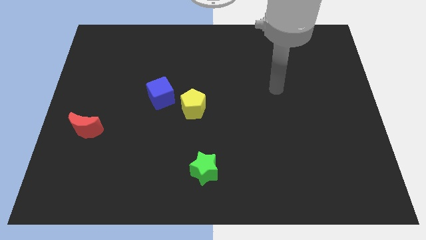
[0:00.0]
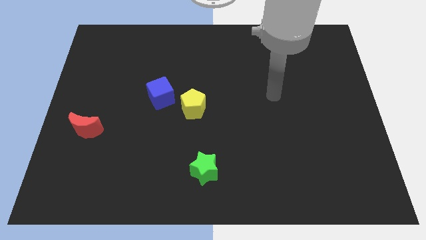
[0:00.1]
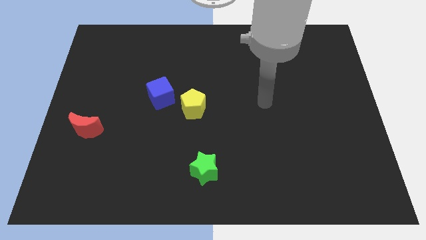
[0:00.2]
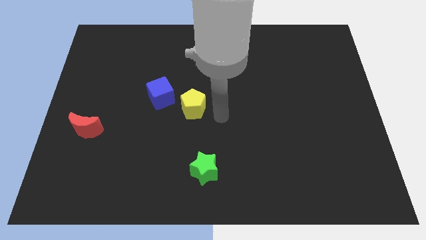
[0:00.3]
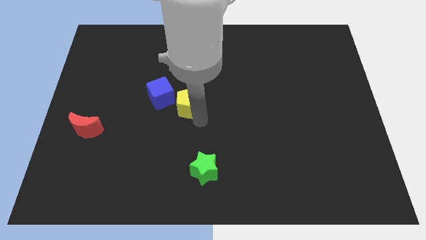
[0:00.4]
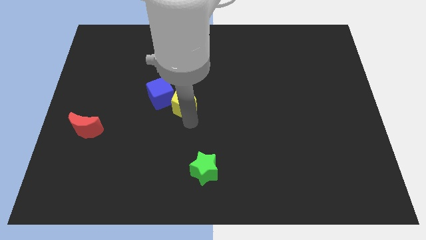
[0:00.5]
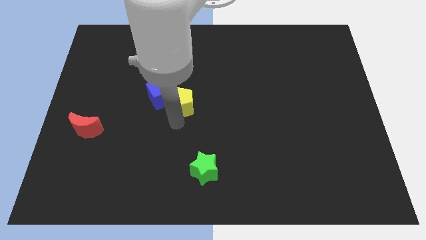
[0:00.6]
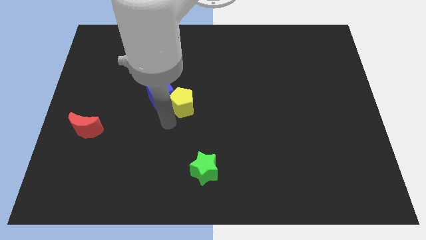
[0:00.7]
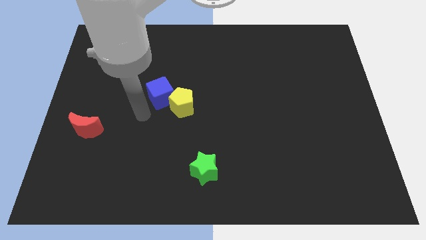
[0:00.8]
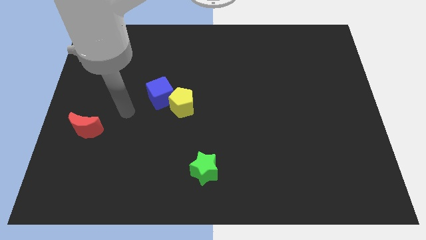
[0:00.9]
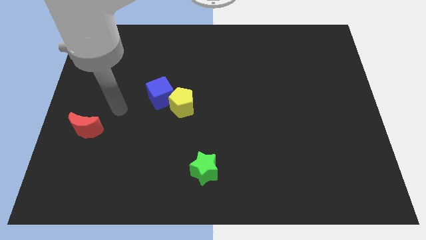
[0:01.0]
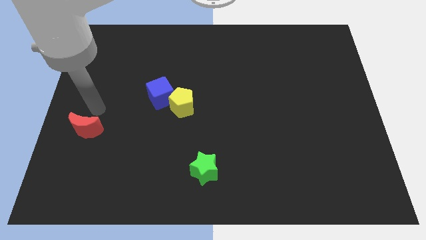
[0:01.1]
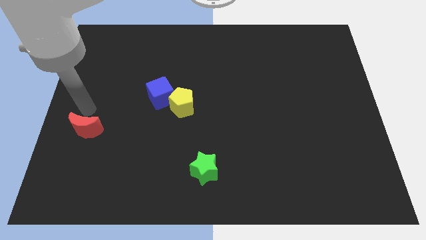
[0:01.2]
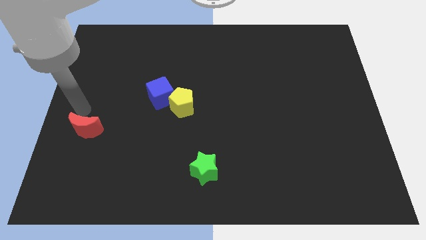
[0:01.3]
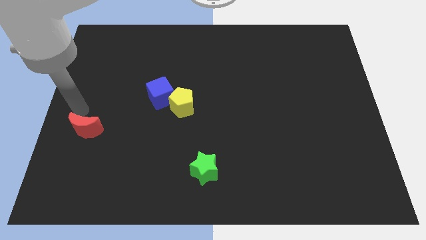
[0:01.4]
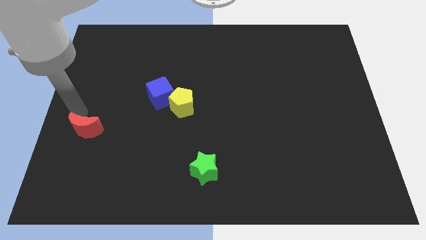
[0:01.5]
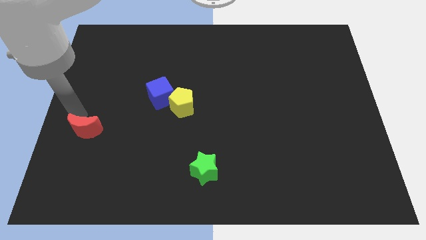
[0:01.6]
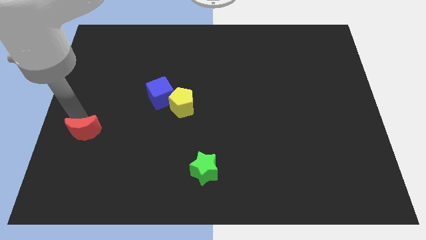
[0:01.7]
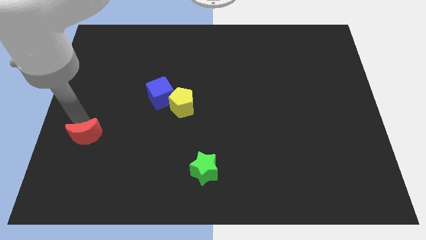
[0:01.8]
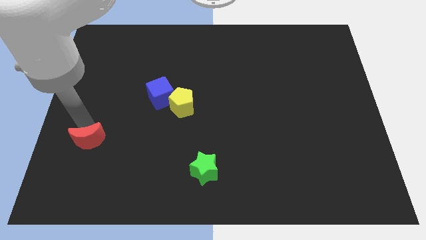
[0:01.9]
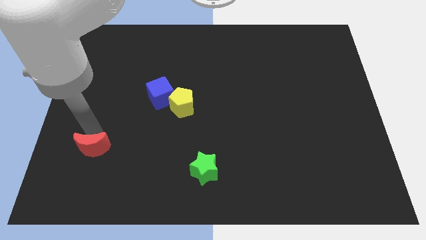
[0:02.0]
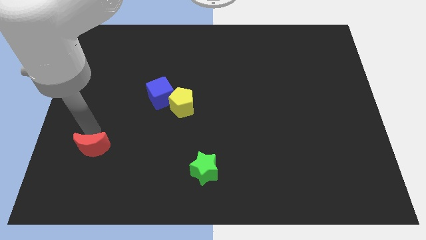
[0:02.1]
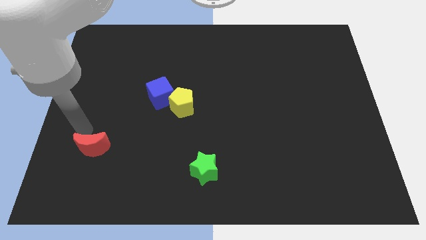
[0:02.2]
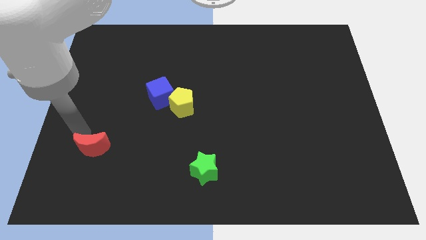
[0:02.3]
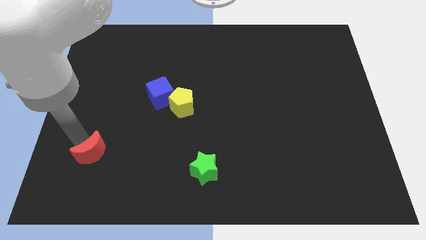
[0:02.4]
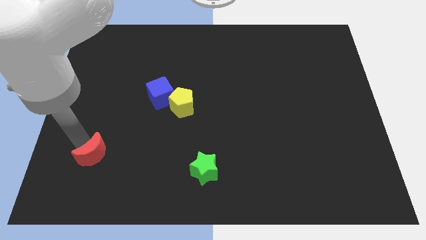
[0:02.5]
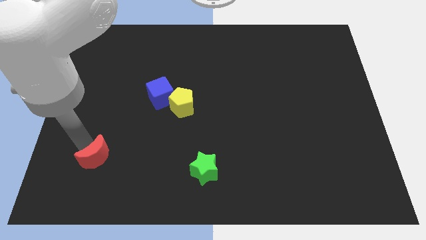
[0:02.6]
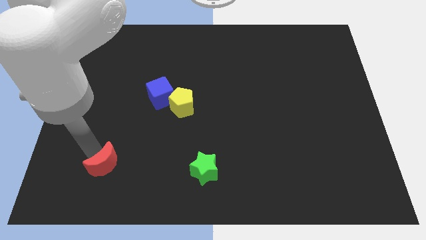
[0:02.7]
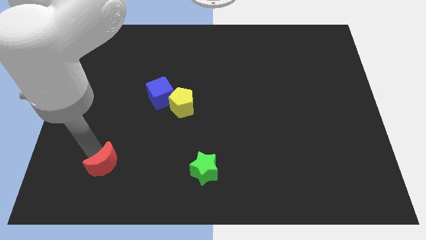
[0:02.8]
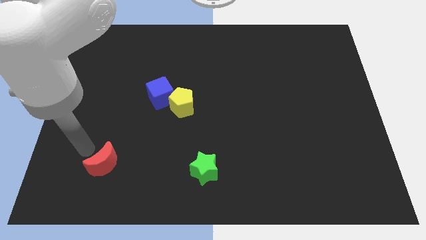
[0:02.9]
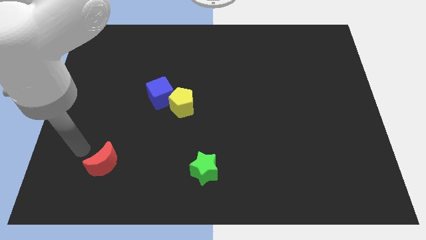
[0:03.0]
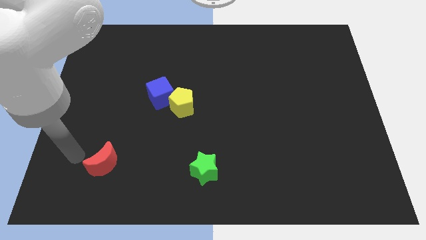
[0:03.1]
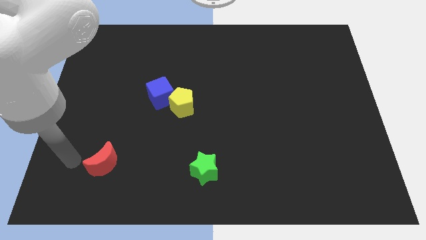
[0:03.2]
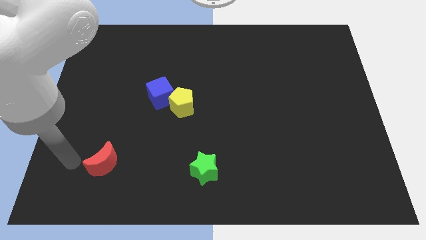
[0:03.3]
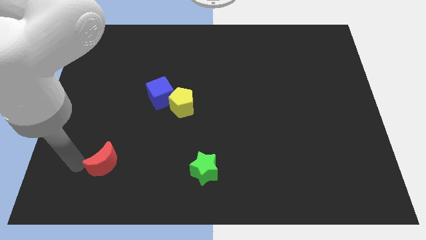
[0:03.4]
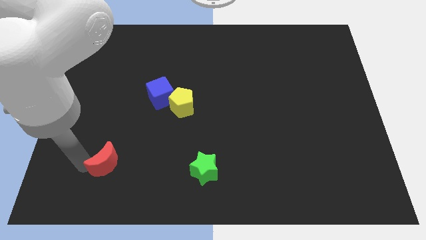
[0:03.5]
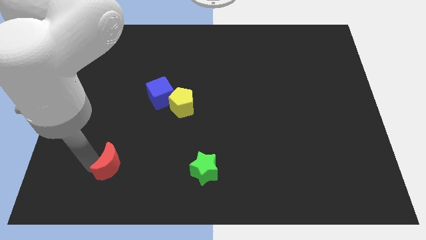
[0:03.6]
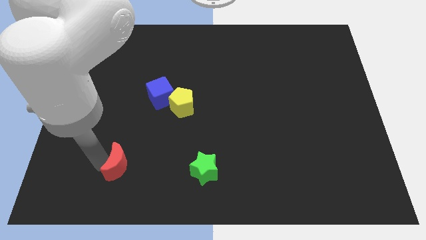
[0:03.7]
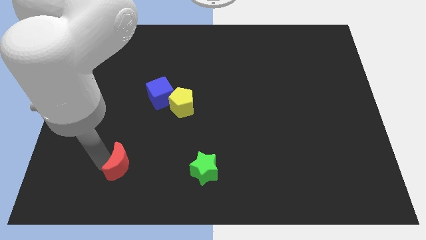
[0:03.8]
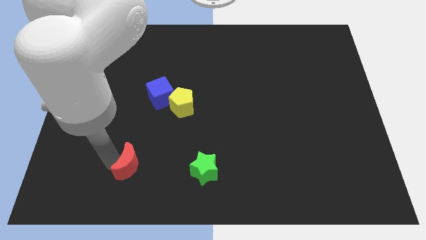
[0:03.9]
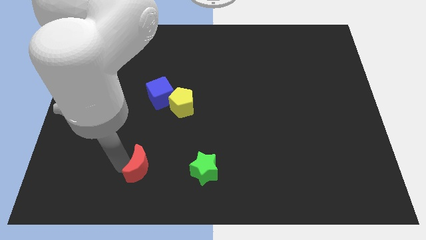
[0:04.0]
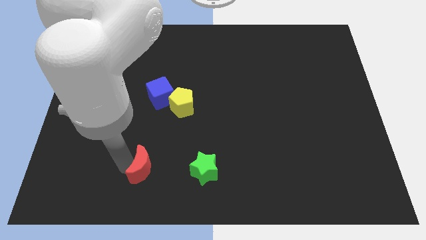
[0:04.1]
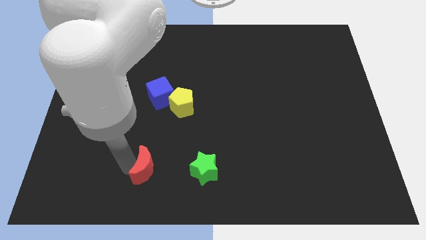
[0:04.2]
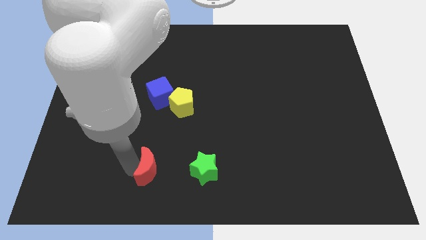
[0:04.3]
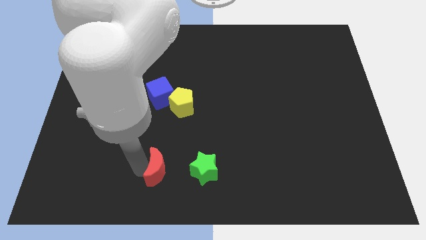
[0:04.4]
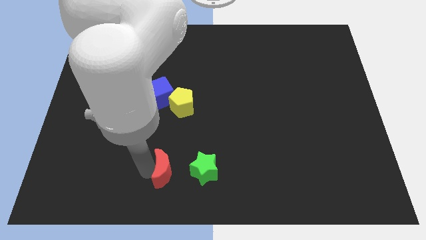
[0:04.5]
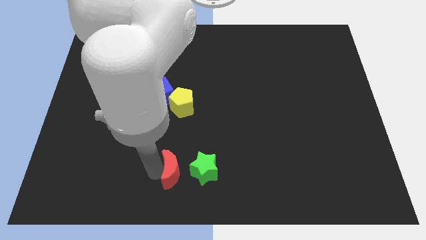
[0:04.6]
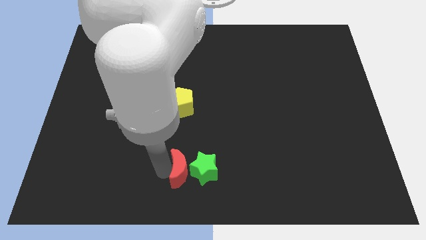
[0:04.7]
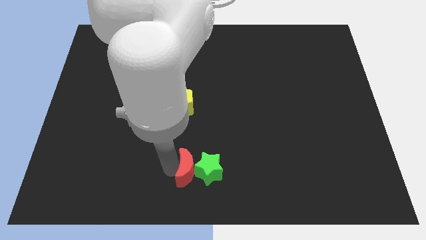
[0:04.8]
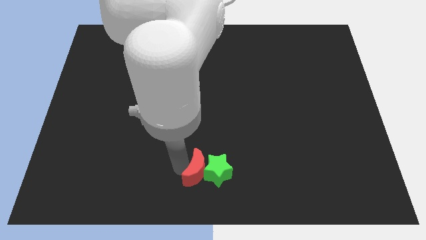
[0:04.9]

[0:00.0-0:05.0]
move the red moon next to the green star

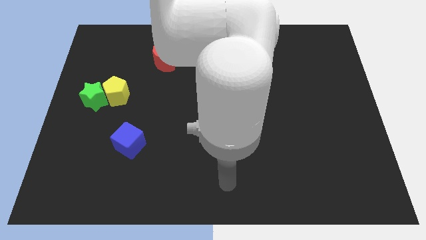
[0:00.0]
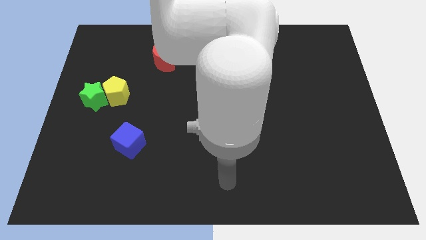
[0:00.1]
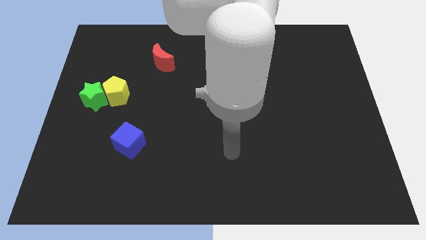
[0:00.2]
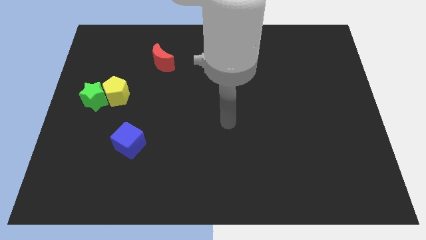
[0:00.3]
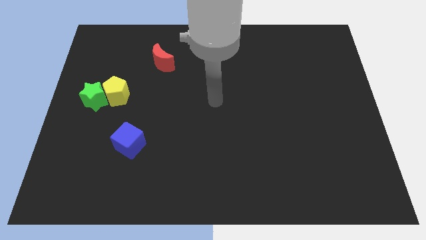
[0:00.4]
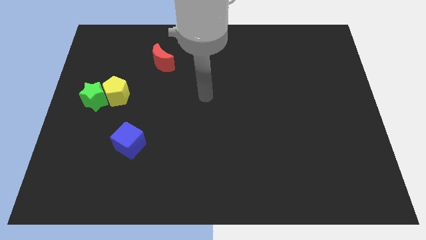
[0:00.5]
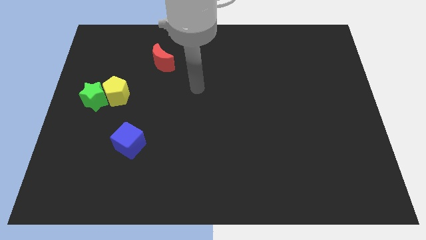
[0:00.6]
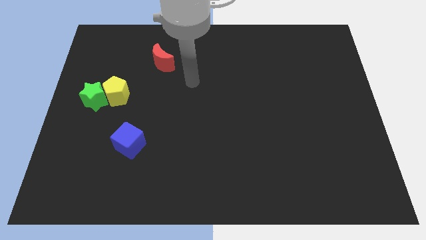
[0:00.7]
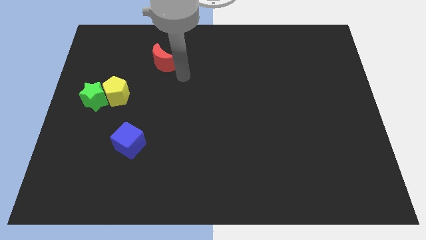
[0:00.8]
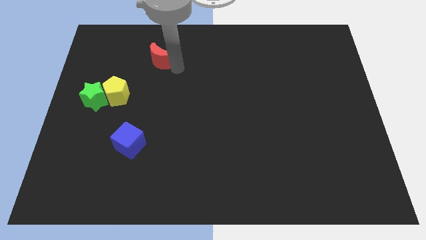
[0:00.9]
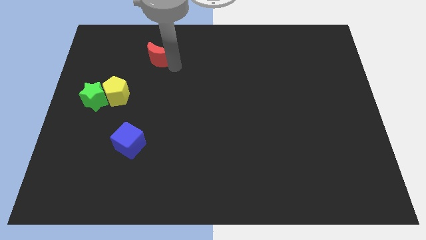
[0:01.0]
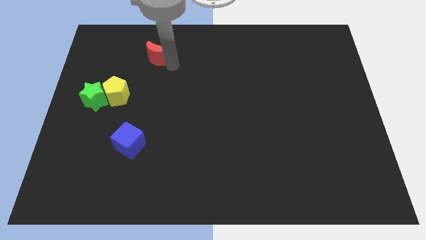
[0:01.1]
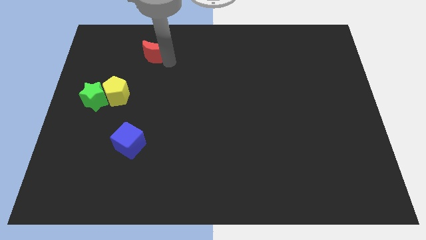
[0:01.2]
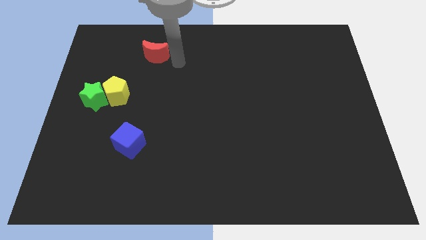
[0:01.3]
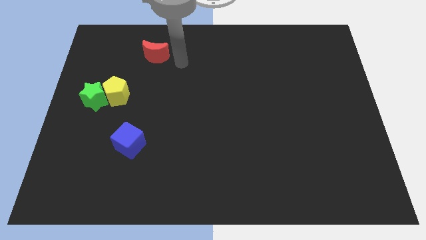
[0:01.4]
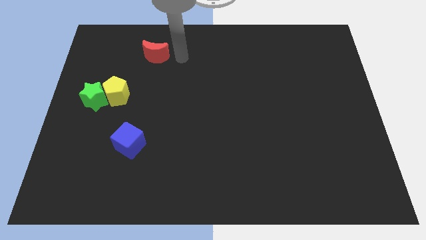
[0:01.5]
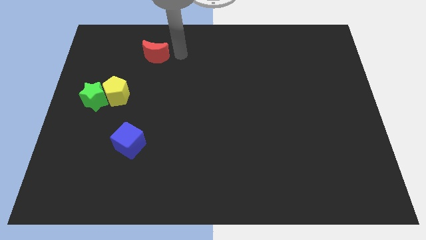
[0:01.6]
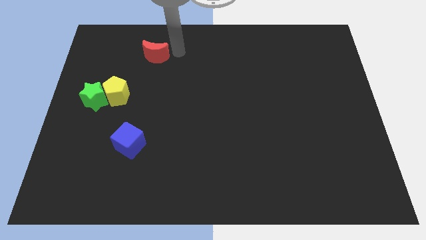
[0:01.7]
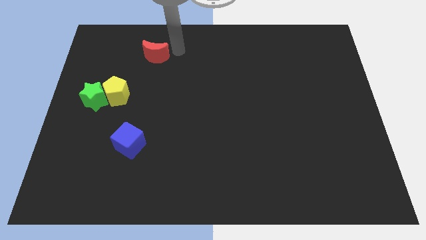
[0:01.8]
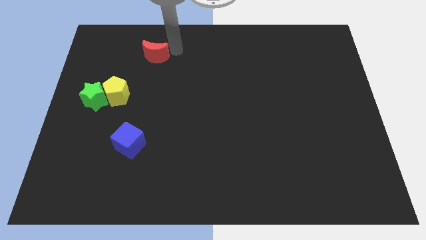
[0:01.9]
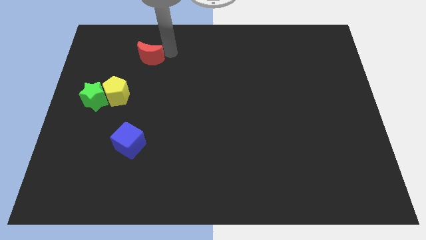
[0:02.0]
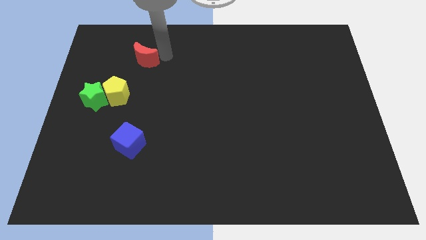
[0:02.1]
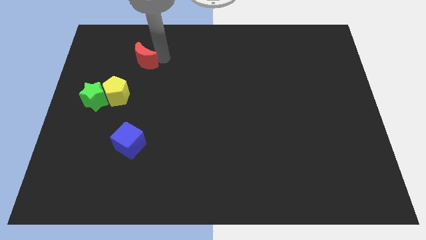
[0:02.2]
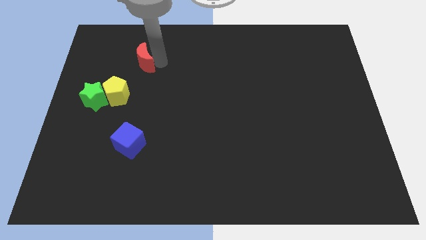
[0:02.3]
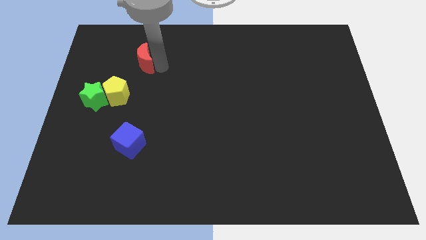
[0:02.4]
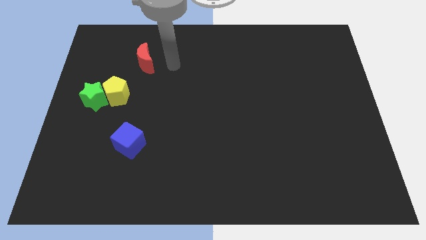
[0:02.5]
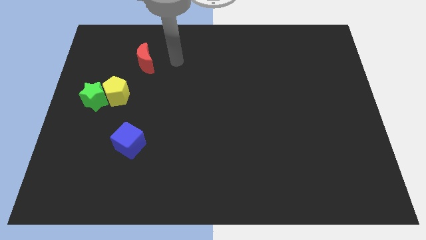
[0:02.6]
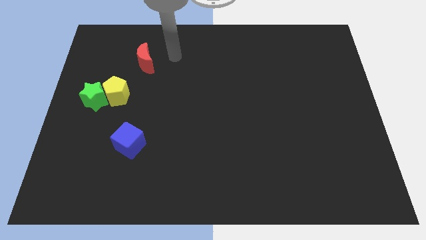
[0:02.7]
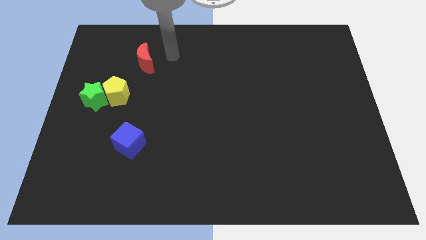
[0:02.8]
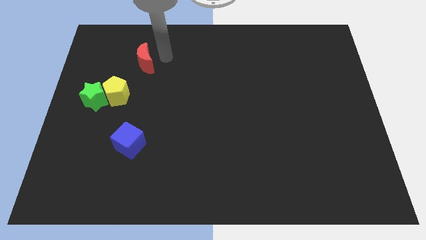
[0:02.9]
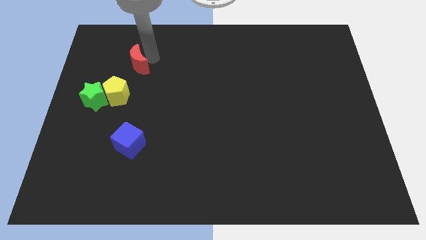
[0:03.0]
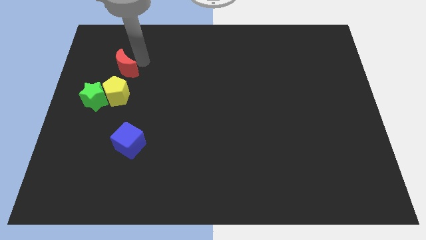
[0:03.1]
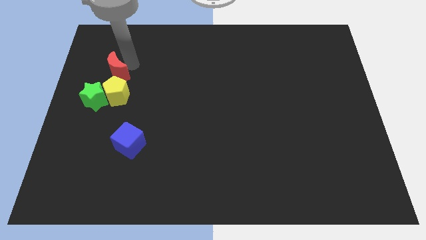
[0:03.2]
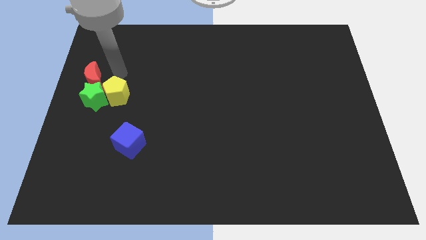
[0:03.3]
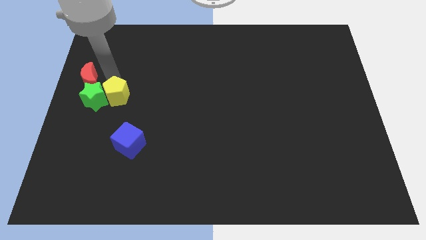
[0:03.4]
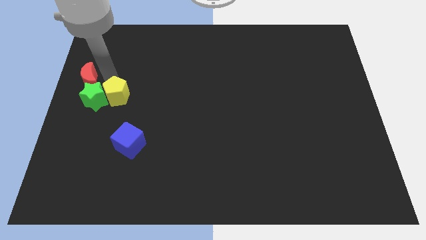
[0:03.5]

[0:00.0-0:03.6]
push the red block to the green block
